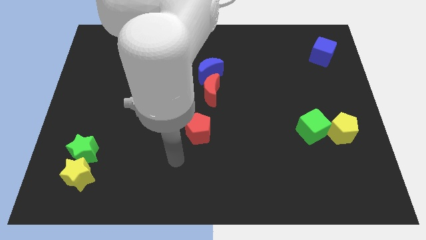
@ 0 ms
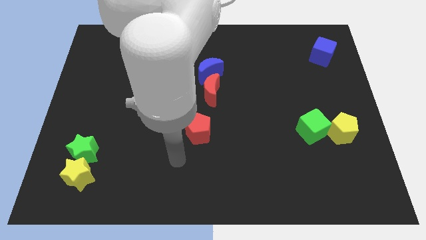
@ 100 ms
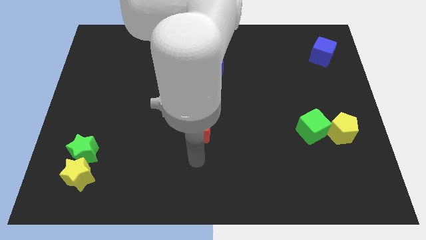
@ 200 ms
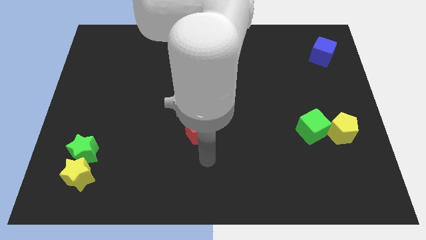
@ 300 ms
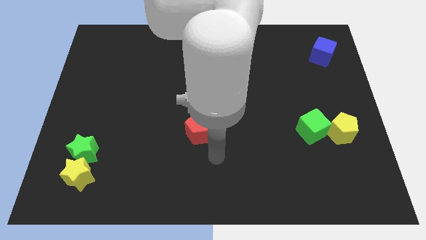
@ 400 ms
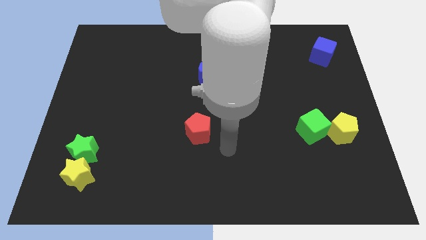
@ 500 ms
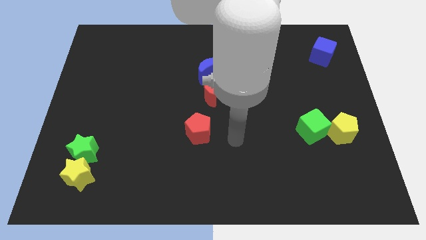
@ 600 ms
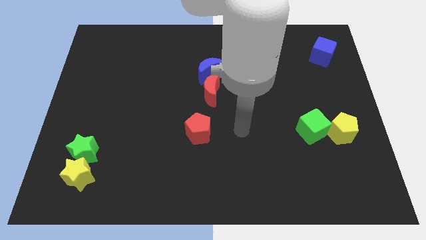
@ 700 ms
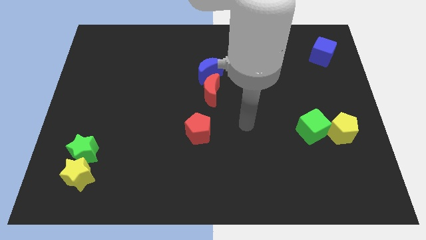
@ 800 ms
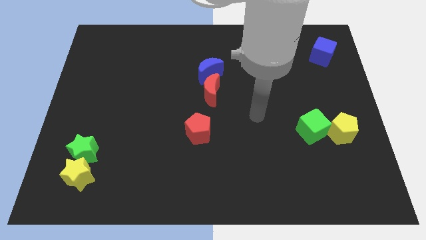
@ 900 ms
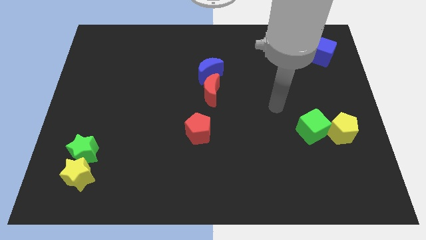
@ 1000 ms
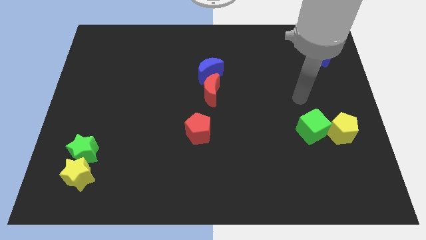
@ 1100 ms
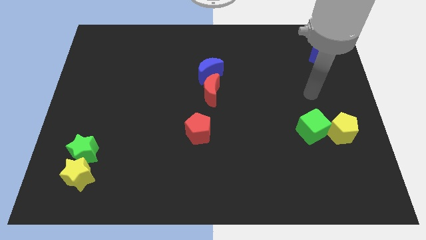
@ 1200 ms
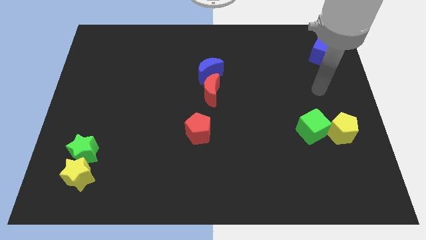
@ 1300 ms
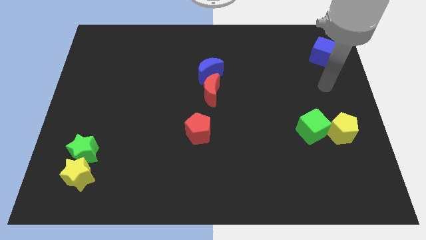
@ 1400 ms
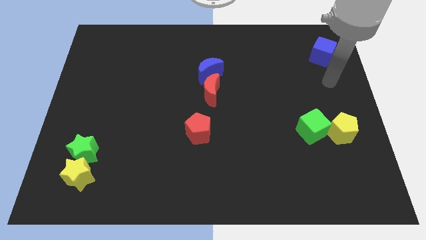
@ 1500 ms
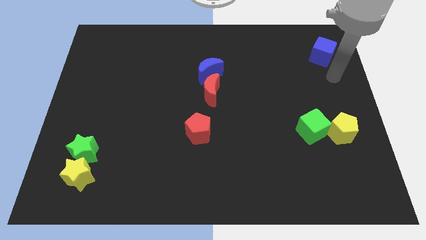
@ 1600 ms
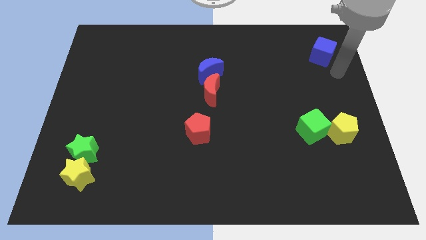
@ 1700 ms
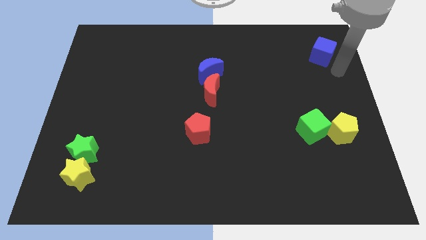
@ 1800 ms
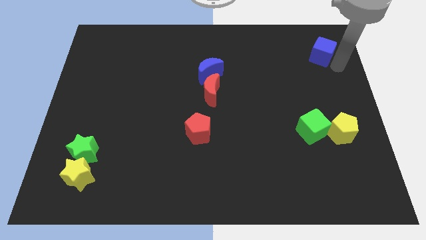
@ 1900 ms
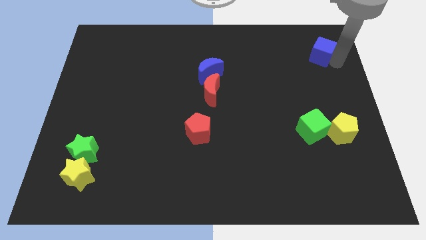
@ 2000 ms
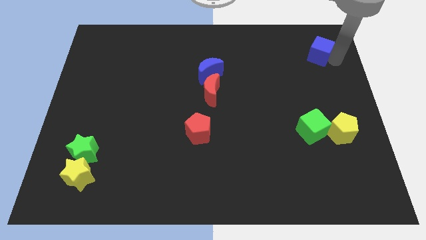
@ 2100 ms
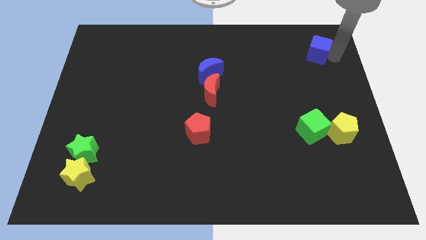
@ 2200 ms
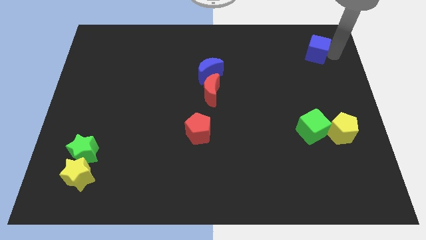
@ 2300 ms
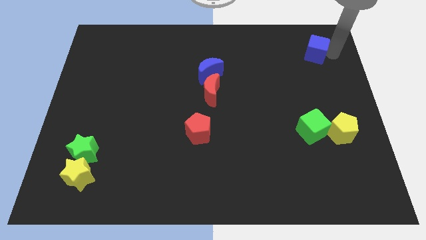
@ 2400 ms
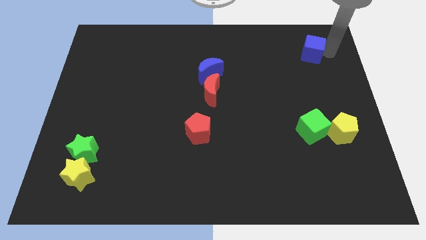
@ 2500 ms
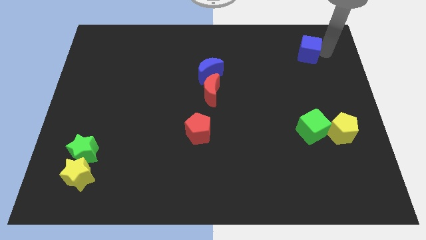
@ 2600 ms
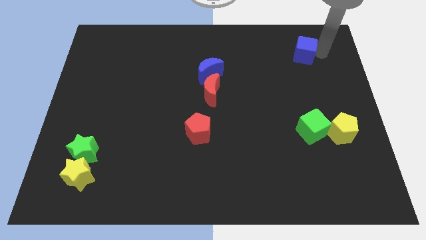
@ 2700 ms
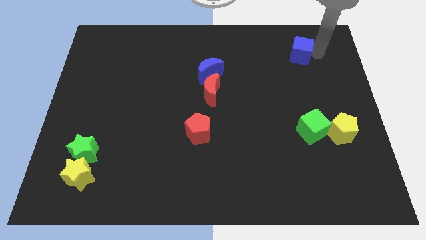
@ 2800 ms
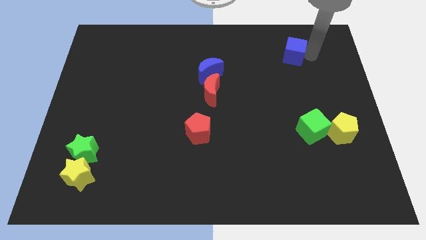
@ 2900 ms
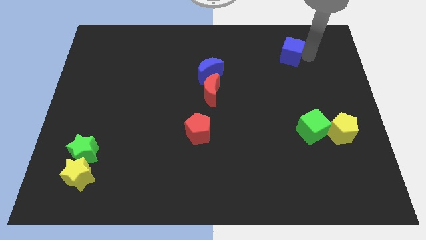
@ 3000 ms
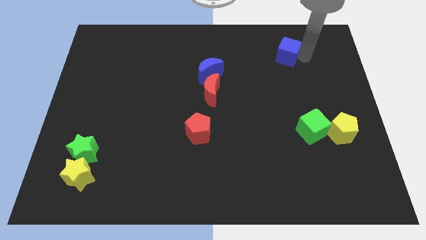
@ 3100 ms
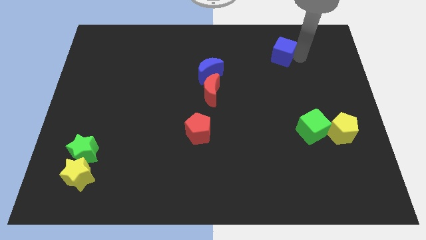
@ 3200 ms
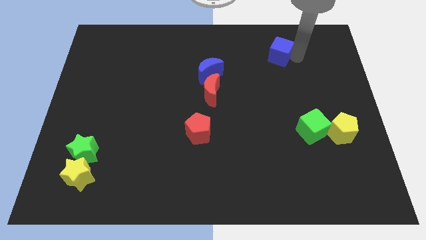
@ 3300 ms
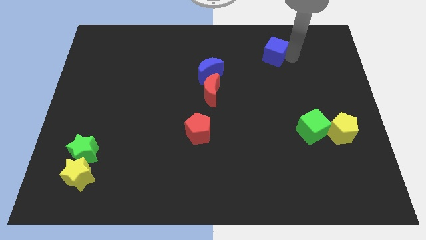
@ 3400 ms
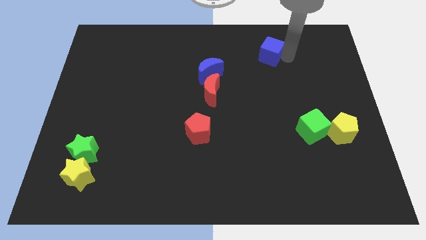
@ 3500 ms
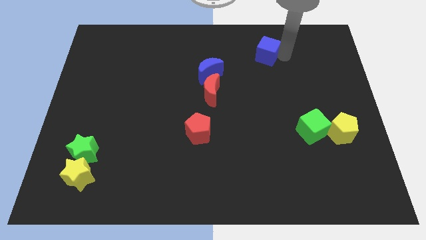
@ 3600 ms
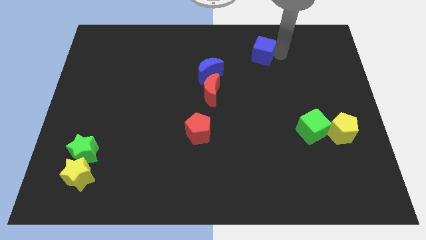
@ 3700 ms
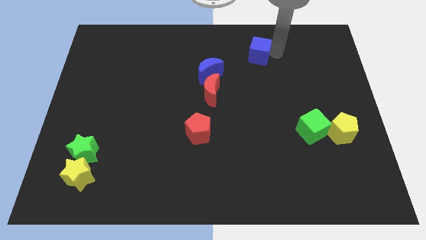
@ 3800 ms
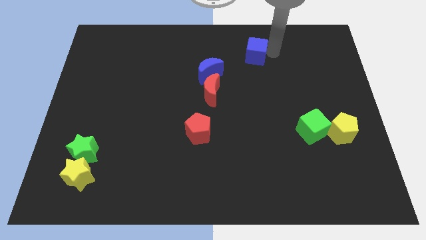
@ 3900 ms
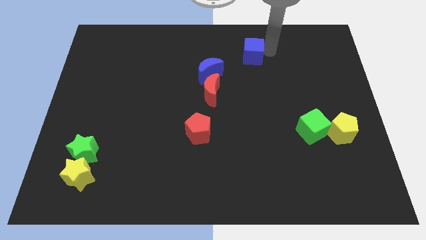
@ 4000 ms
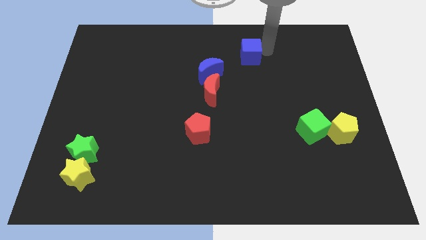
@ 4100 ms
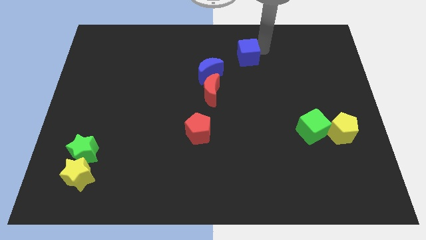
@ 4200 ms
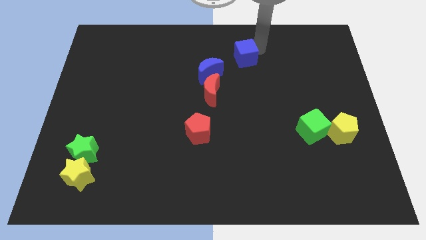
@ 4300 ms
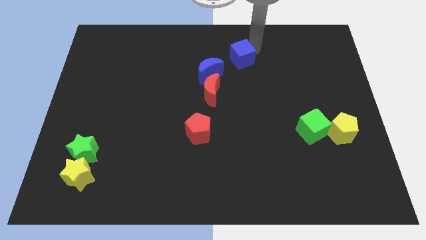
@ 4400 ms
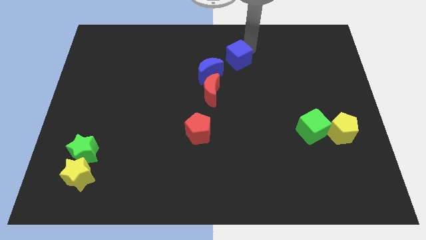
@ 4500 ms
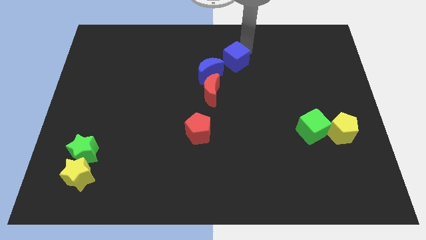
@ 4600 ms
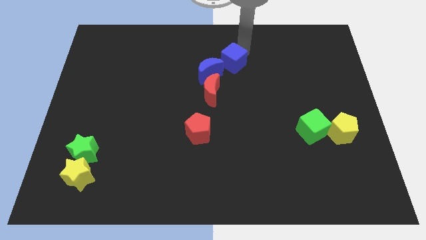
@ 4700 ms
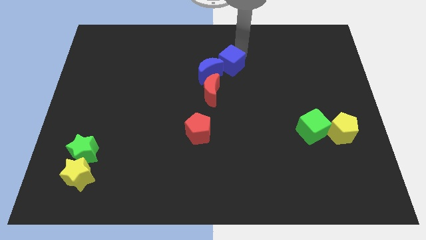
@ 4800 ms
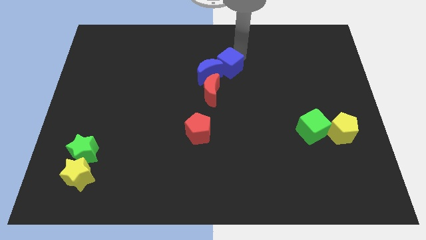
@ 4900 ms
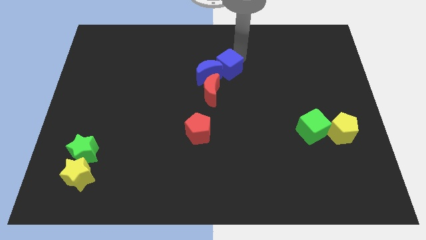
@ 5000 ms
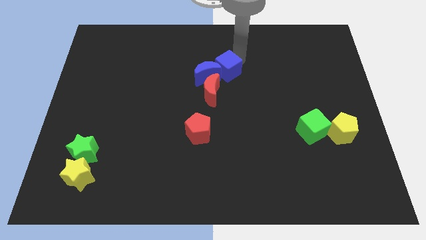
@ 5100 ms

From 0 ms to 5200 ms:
slide the blue cube to the blue moon

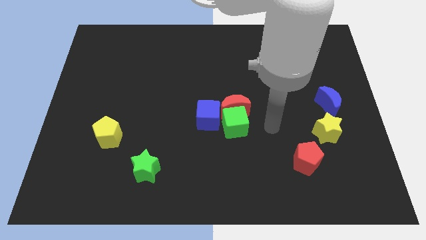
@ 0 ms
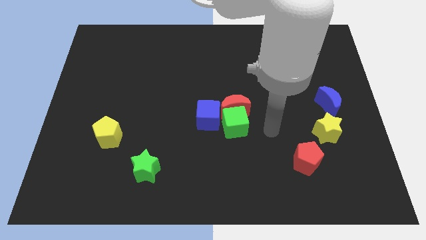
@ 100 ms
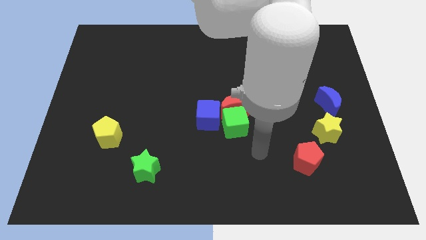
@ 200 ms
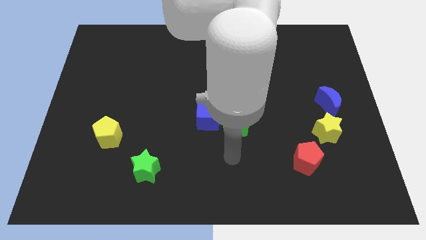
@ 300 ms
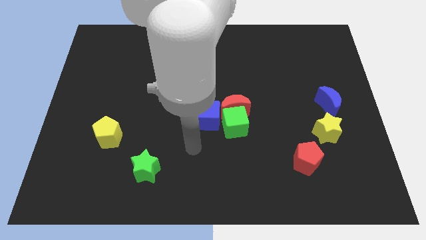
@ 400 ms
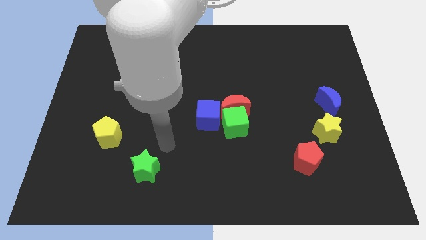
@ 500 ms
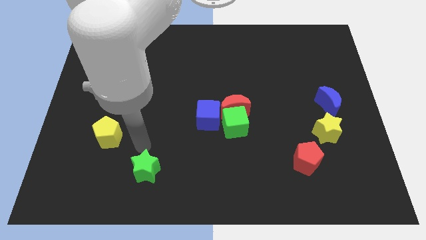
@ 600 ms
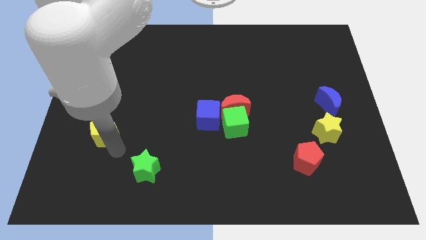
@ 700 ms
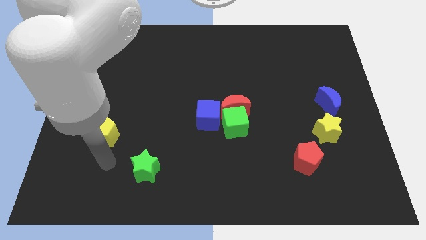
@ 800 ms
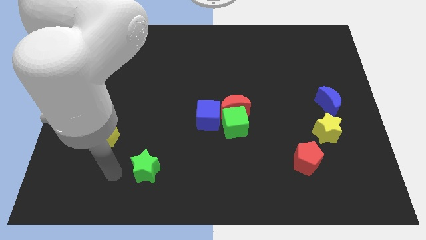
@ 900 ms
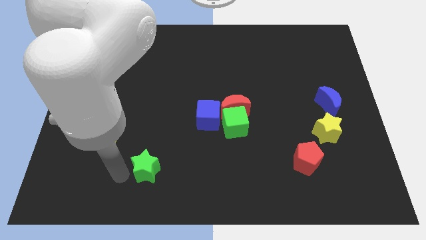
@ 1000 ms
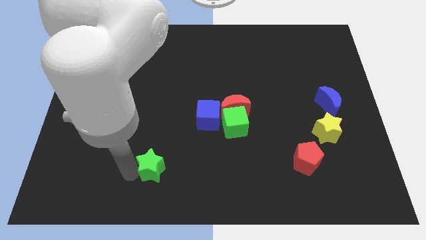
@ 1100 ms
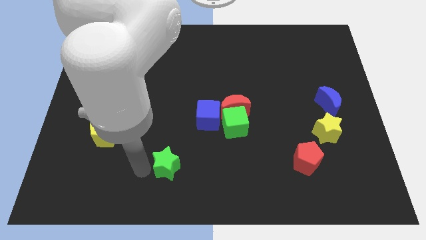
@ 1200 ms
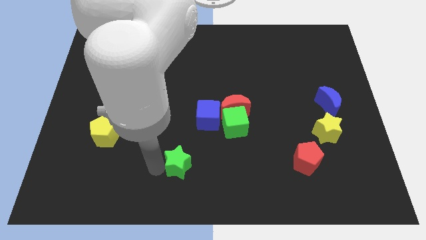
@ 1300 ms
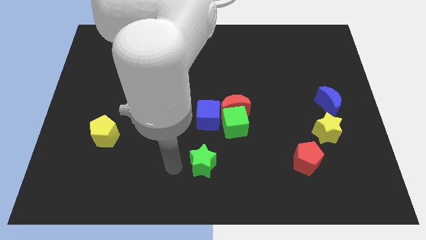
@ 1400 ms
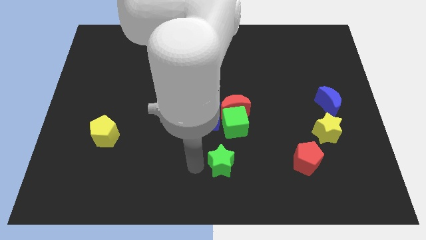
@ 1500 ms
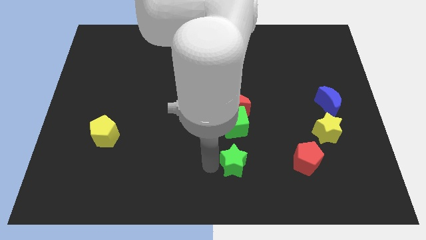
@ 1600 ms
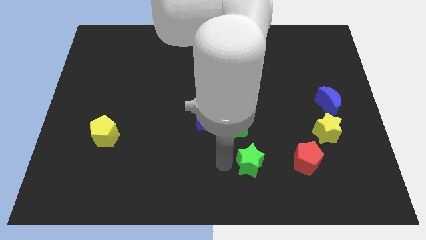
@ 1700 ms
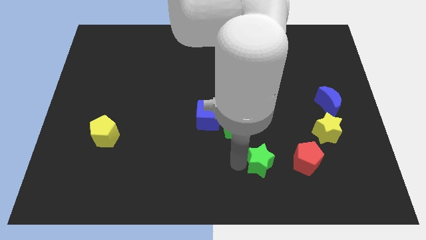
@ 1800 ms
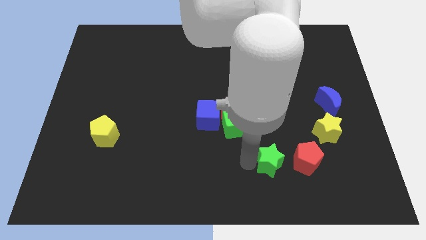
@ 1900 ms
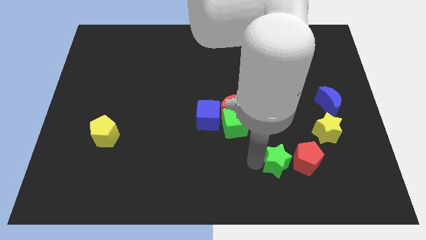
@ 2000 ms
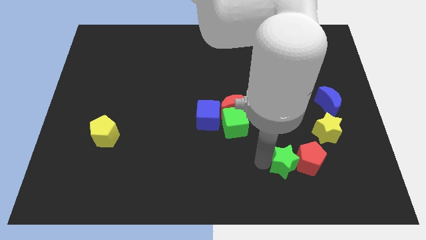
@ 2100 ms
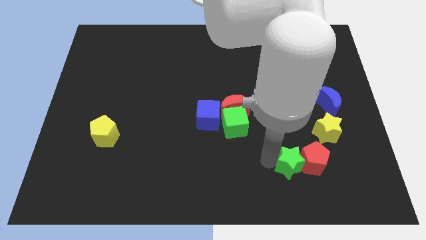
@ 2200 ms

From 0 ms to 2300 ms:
move the green star towards the red pentagon

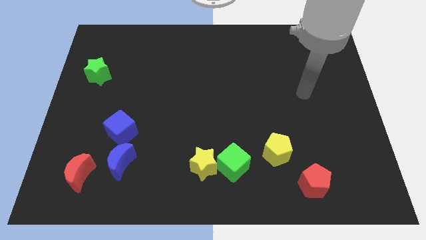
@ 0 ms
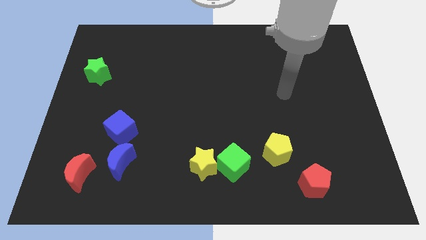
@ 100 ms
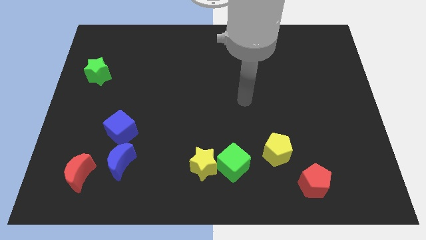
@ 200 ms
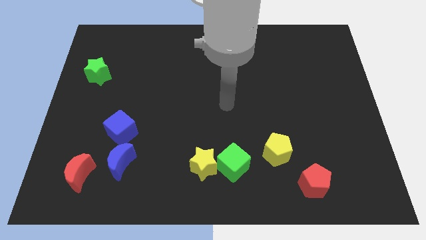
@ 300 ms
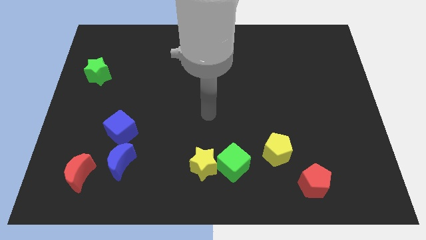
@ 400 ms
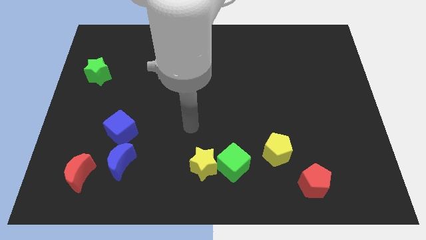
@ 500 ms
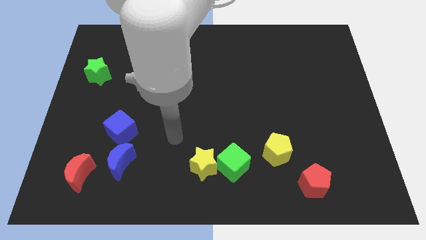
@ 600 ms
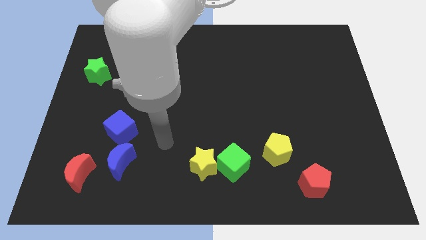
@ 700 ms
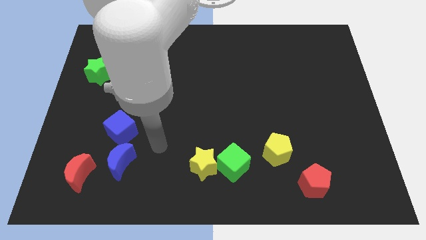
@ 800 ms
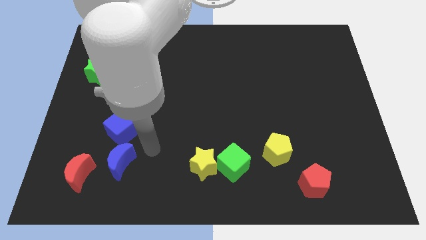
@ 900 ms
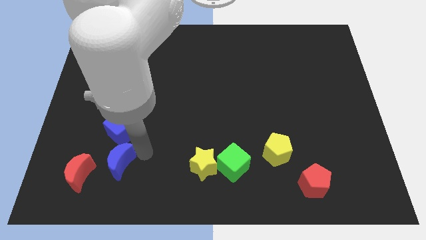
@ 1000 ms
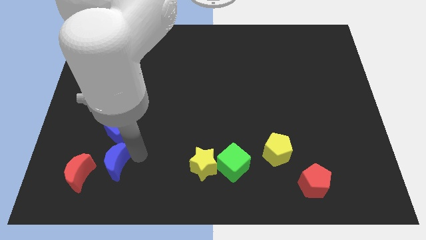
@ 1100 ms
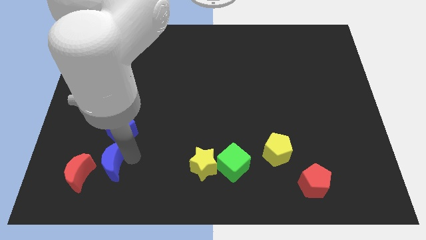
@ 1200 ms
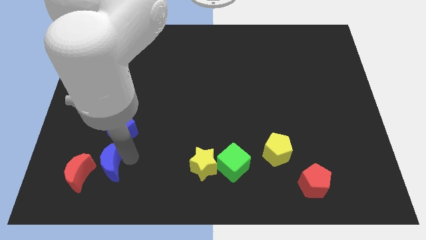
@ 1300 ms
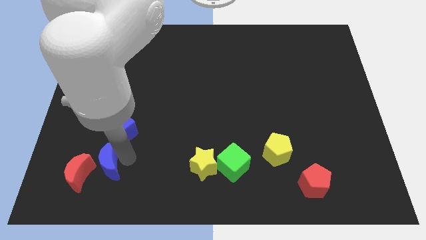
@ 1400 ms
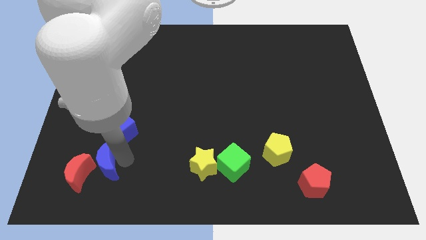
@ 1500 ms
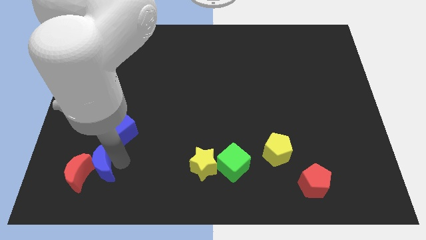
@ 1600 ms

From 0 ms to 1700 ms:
push the blue moon next to the red moon
